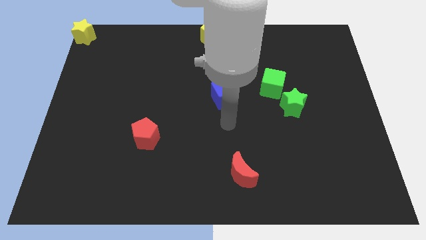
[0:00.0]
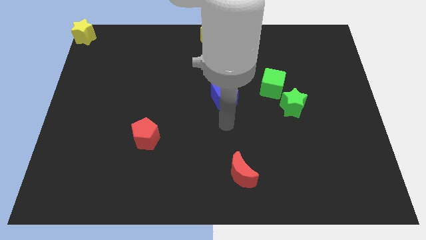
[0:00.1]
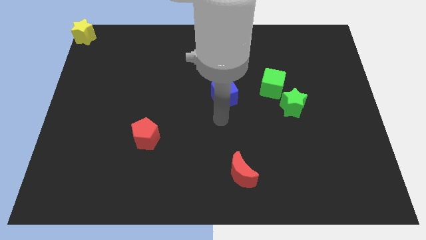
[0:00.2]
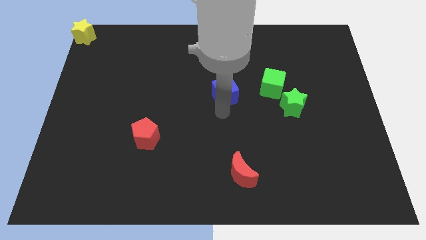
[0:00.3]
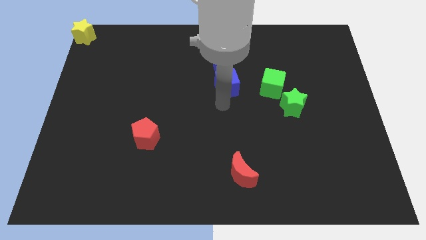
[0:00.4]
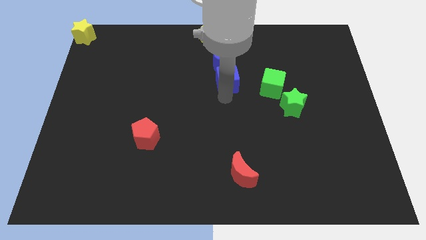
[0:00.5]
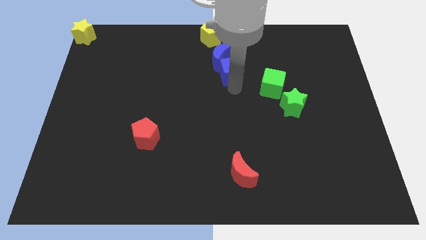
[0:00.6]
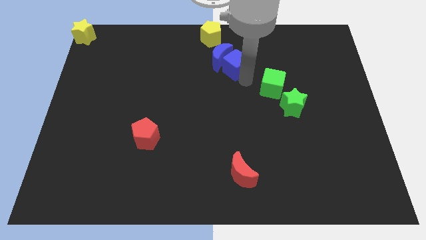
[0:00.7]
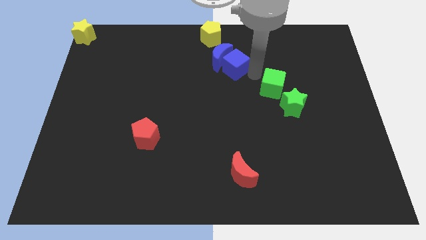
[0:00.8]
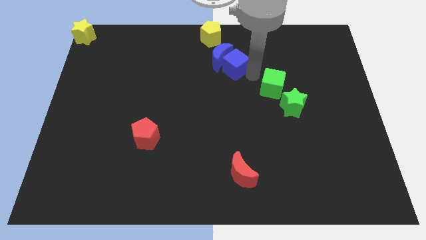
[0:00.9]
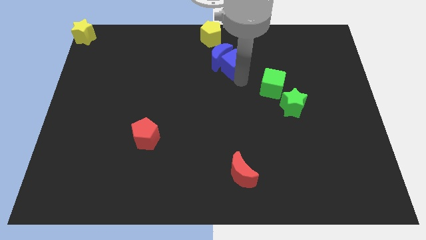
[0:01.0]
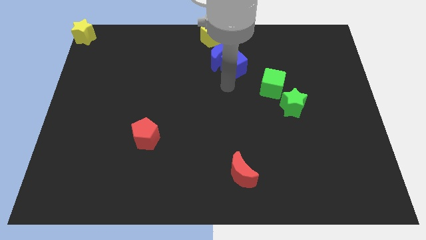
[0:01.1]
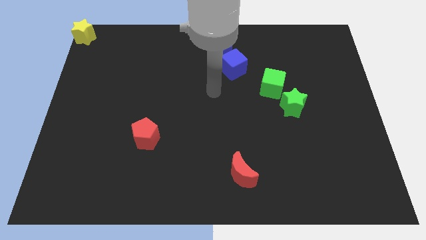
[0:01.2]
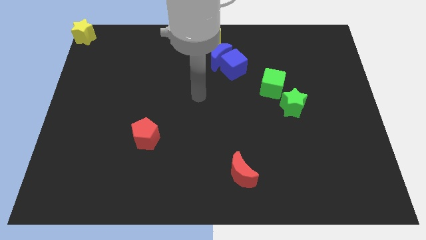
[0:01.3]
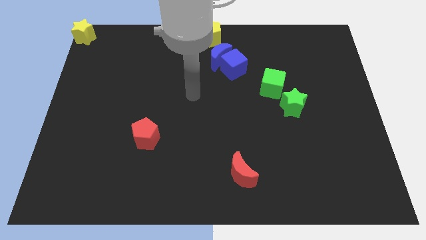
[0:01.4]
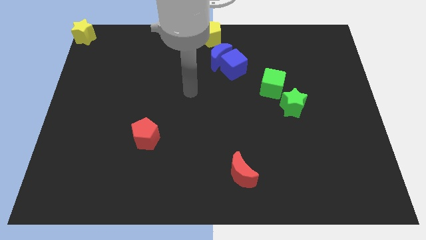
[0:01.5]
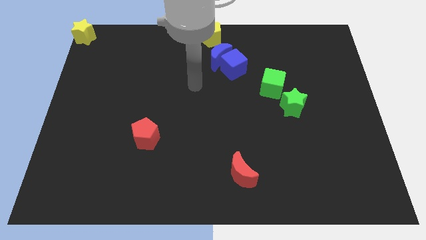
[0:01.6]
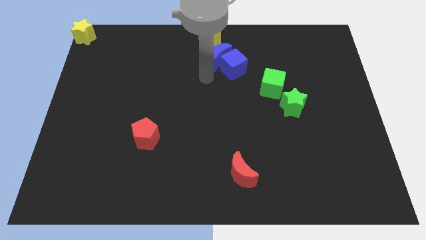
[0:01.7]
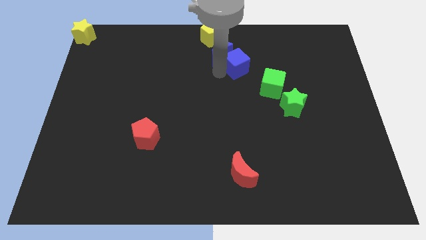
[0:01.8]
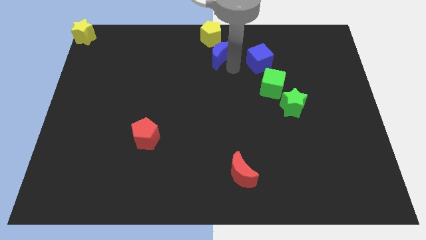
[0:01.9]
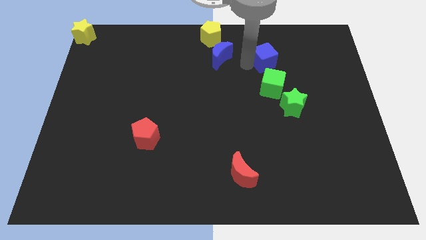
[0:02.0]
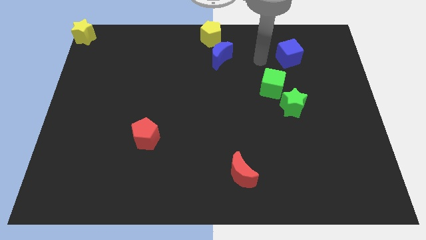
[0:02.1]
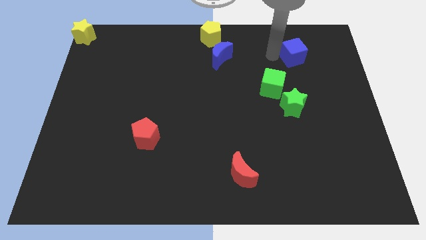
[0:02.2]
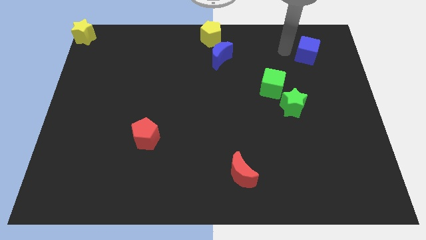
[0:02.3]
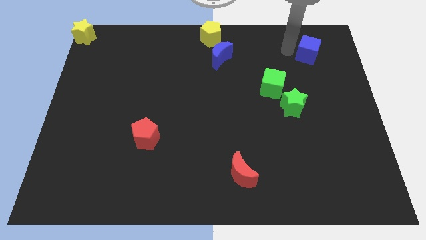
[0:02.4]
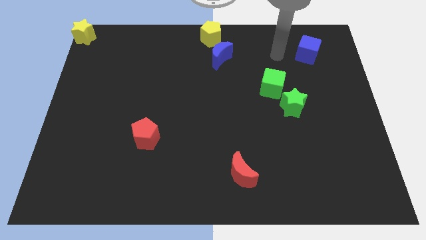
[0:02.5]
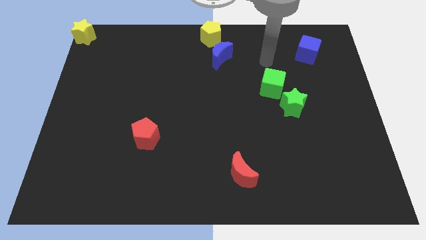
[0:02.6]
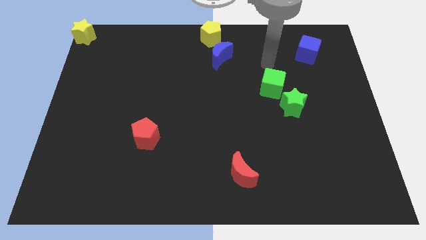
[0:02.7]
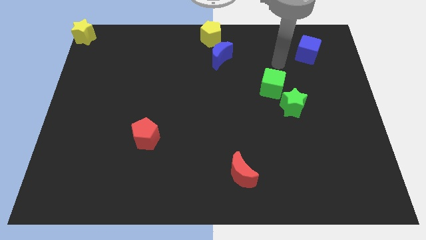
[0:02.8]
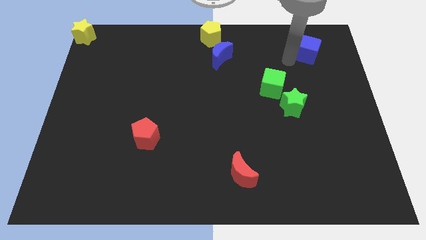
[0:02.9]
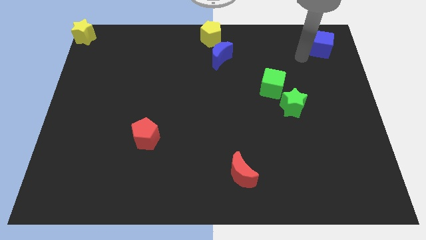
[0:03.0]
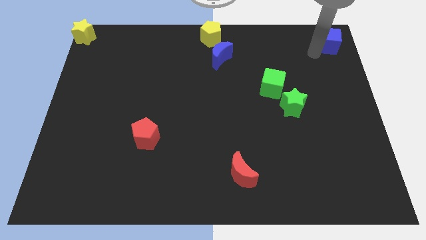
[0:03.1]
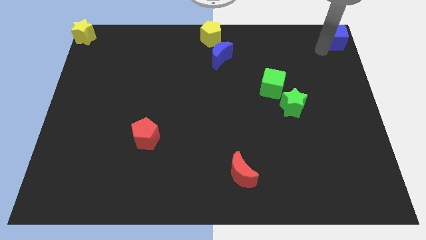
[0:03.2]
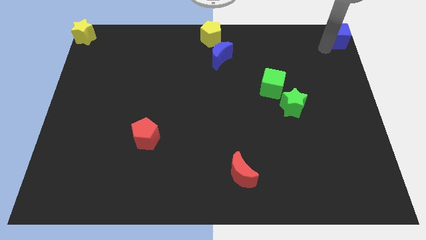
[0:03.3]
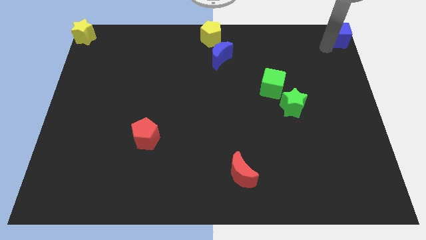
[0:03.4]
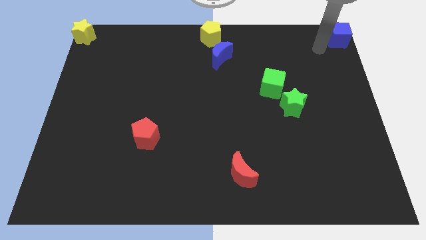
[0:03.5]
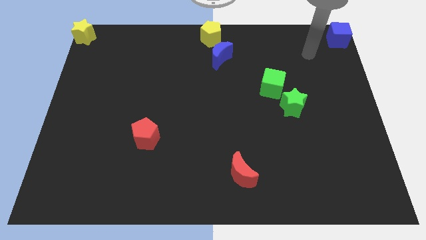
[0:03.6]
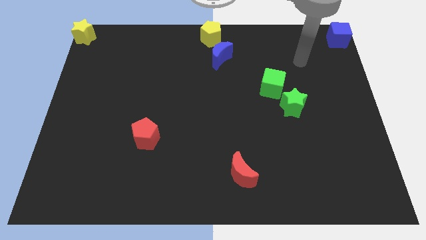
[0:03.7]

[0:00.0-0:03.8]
push the blue cube to the top right

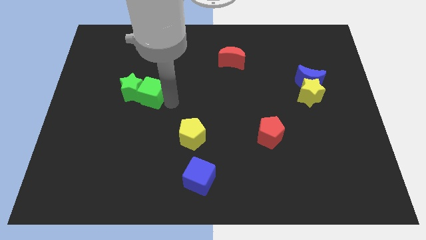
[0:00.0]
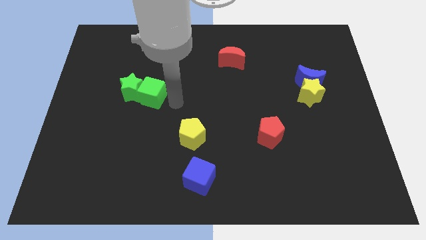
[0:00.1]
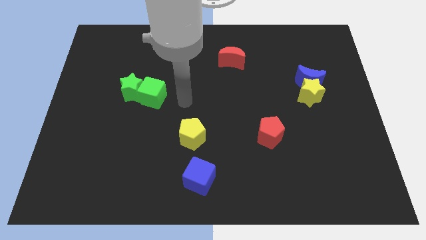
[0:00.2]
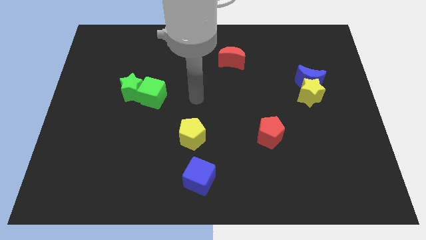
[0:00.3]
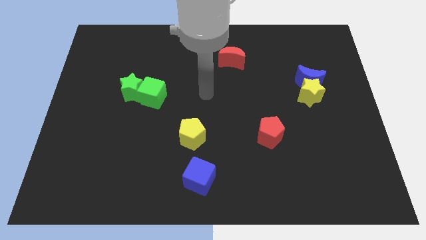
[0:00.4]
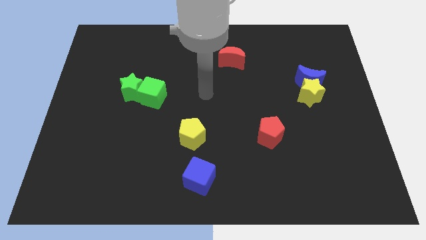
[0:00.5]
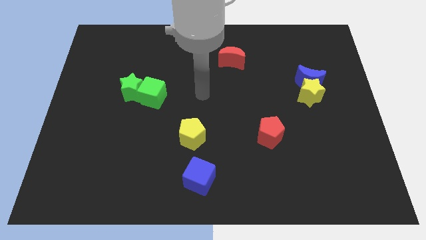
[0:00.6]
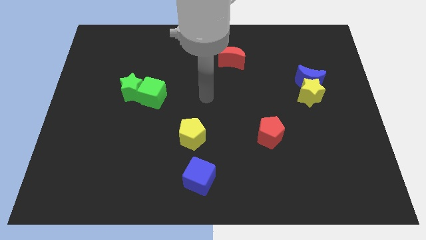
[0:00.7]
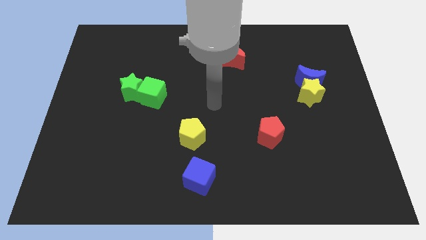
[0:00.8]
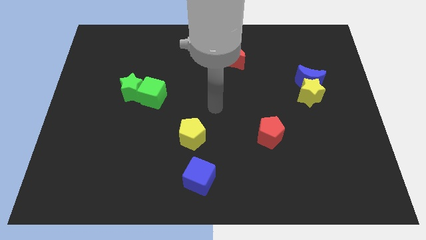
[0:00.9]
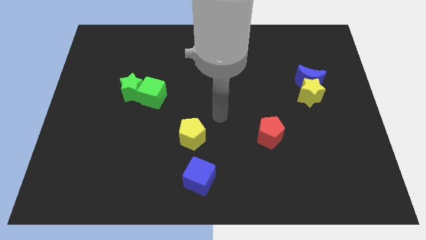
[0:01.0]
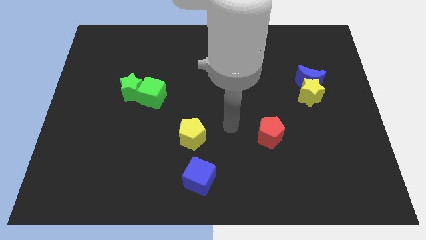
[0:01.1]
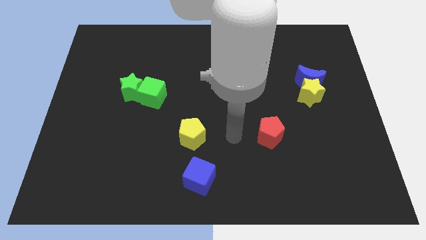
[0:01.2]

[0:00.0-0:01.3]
place your hand in between the yellow pentagon and red pentagon

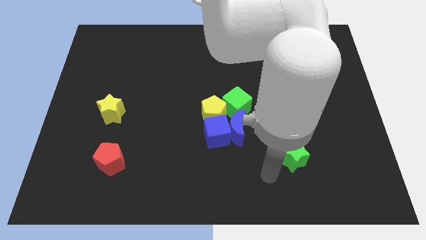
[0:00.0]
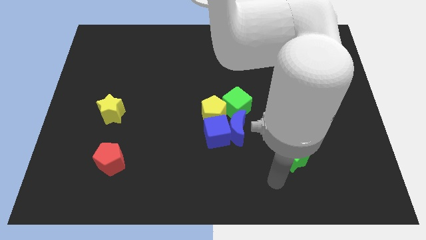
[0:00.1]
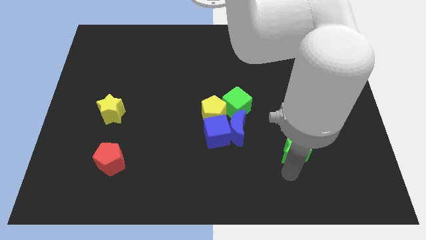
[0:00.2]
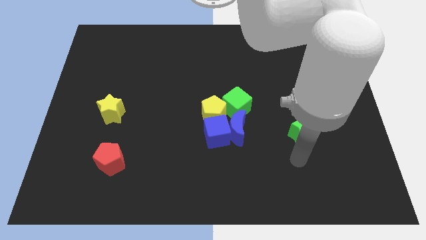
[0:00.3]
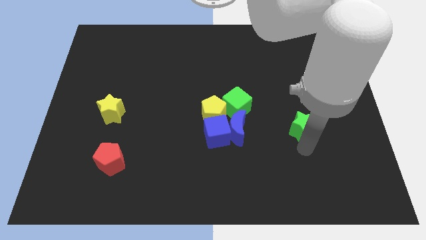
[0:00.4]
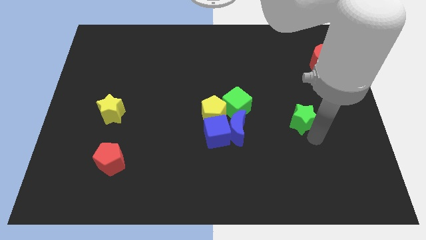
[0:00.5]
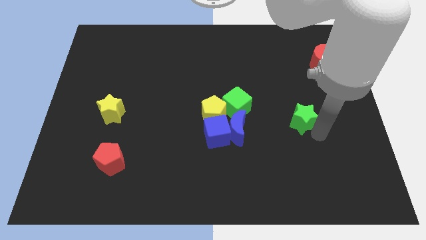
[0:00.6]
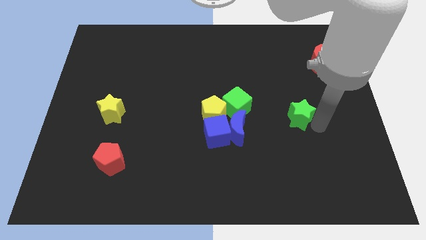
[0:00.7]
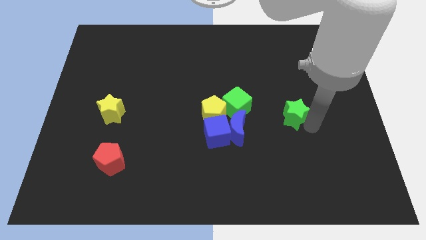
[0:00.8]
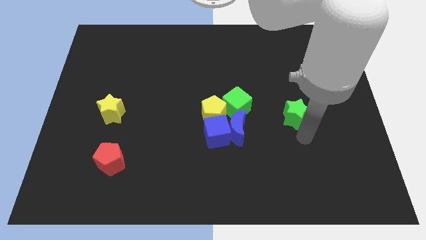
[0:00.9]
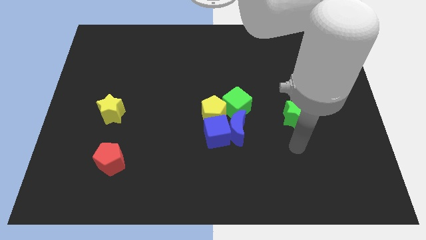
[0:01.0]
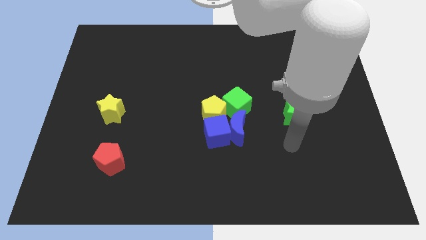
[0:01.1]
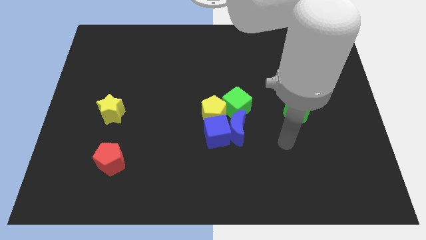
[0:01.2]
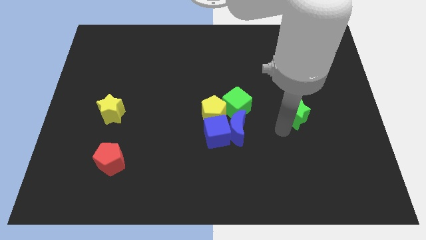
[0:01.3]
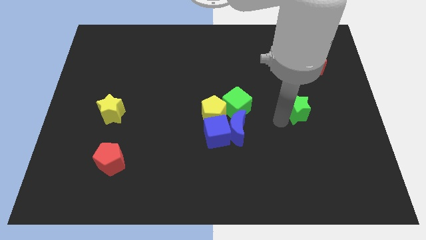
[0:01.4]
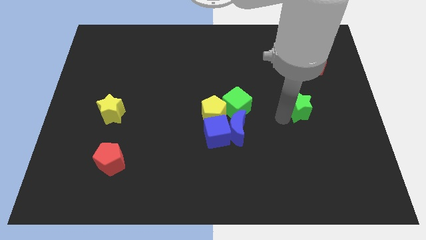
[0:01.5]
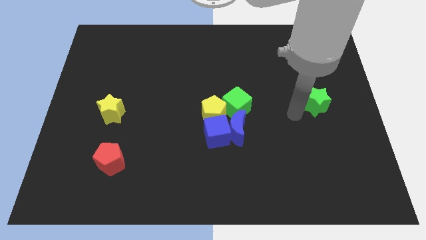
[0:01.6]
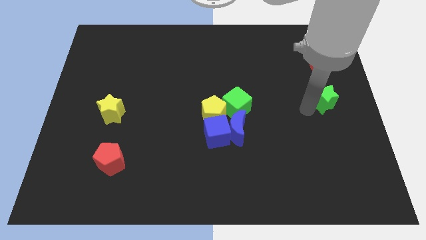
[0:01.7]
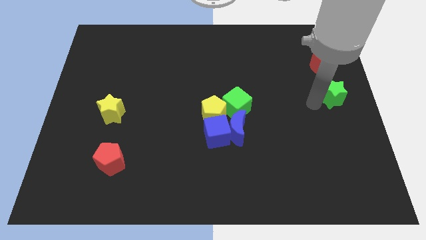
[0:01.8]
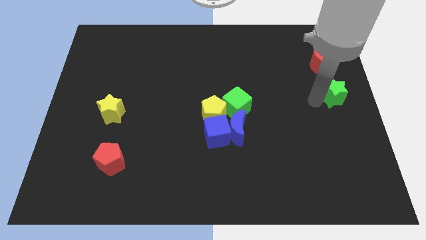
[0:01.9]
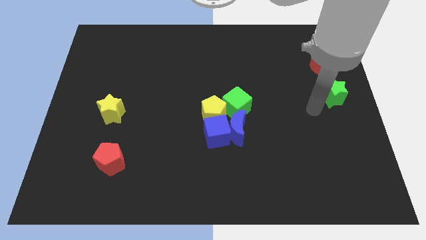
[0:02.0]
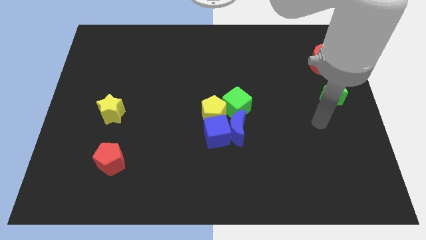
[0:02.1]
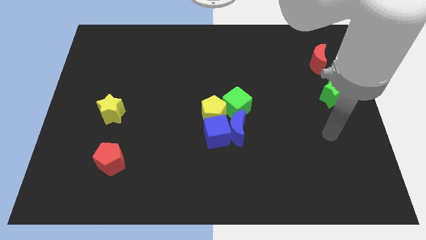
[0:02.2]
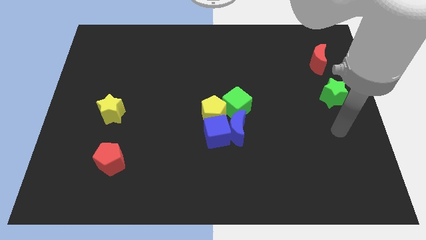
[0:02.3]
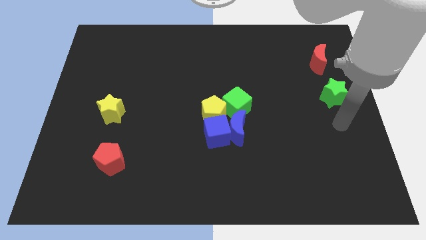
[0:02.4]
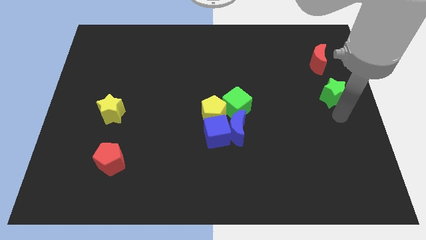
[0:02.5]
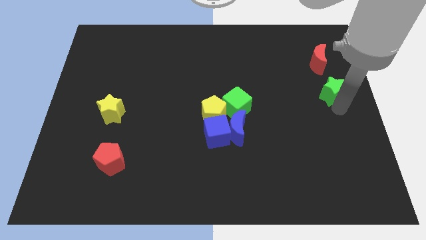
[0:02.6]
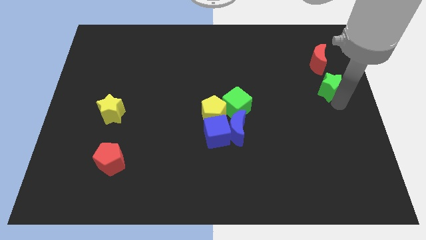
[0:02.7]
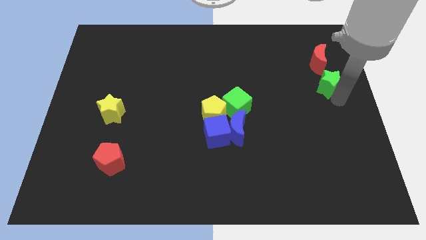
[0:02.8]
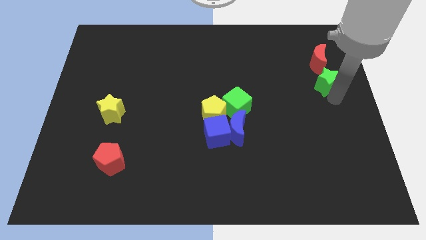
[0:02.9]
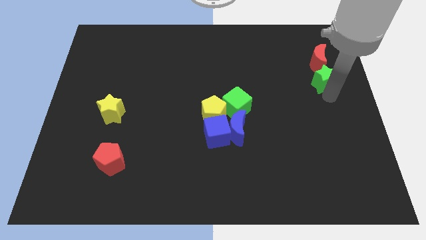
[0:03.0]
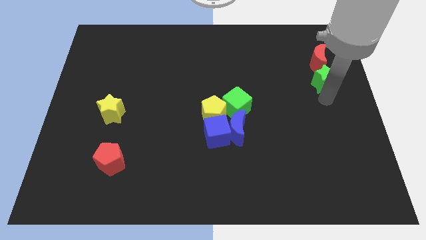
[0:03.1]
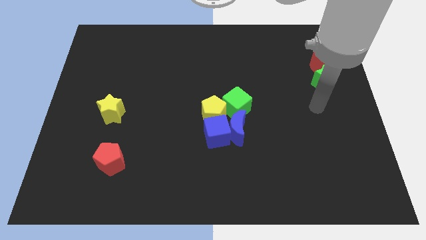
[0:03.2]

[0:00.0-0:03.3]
place green star below the red pentagon

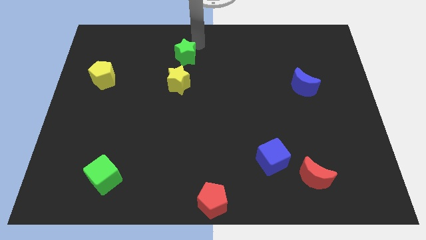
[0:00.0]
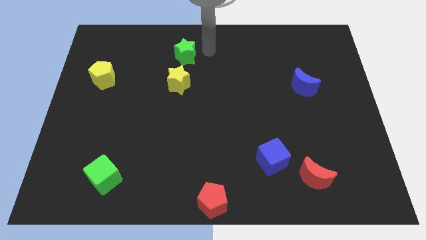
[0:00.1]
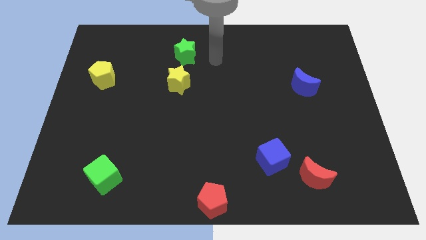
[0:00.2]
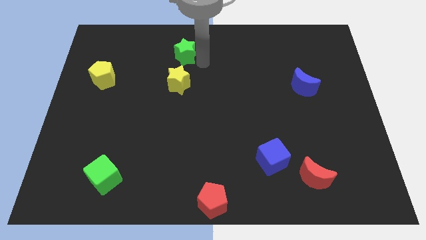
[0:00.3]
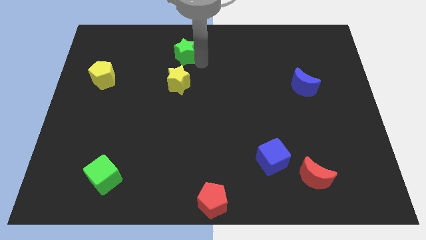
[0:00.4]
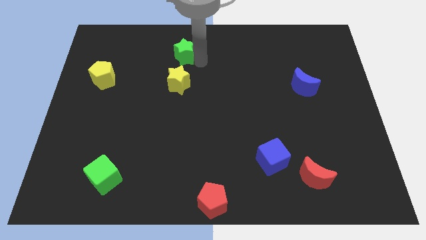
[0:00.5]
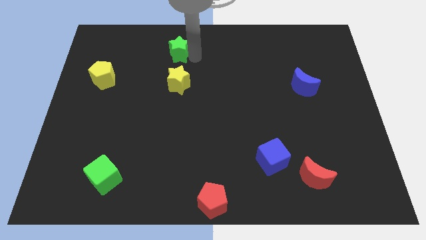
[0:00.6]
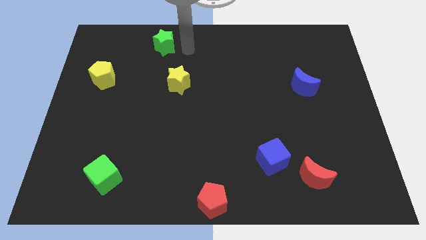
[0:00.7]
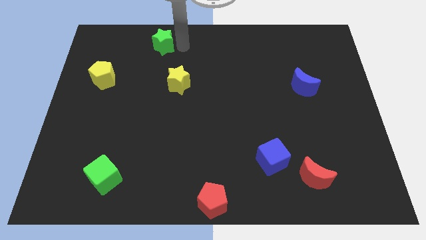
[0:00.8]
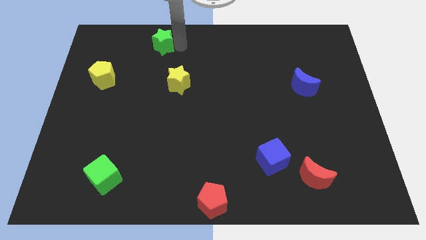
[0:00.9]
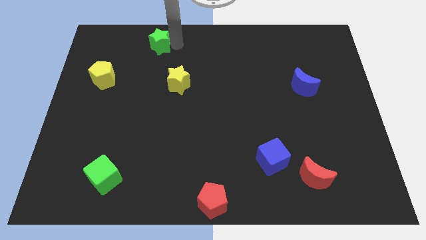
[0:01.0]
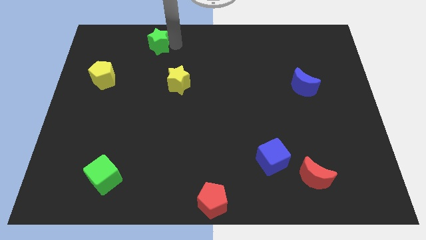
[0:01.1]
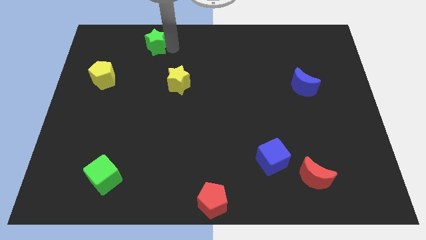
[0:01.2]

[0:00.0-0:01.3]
make a triangle with the green star and the two yellow blocks
